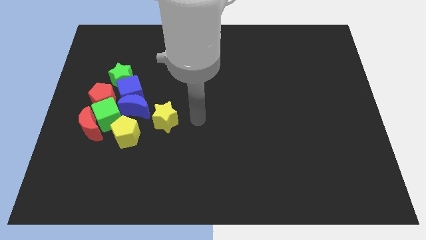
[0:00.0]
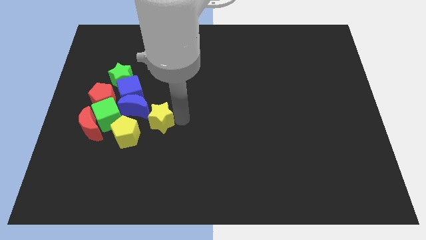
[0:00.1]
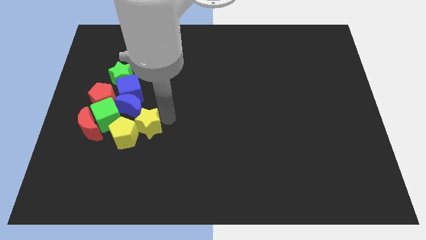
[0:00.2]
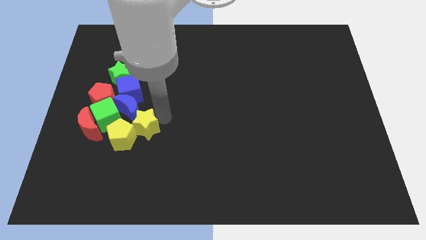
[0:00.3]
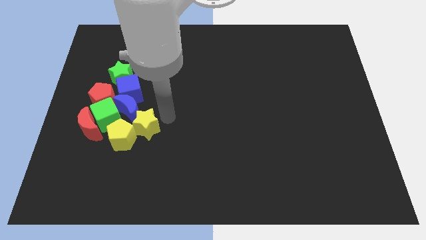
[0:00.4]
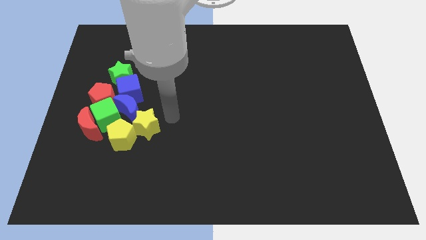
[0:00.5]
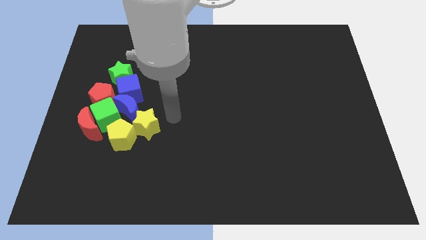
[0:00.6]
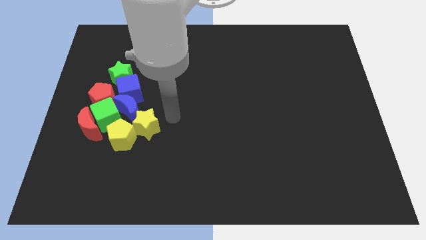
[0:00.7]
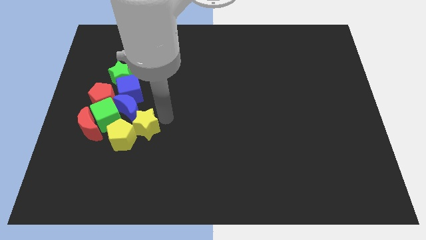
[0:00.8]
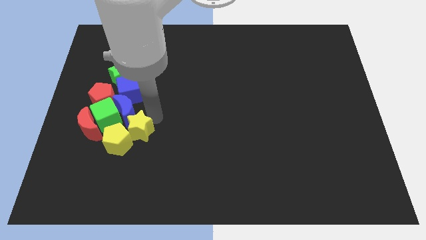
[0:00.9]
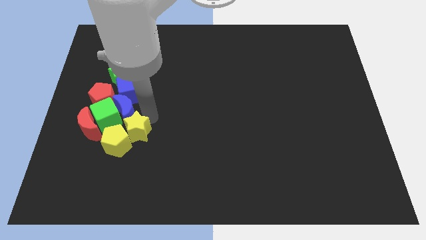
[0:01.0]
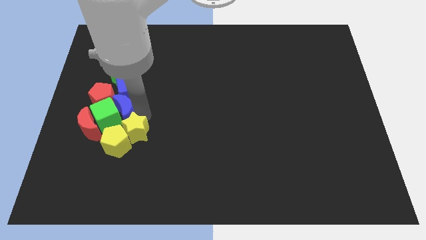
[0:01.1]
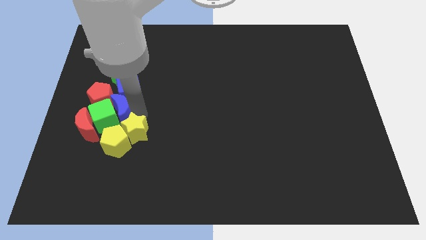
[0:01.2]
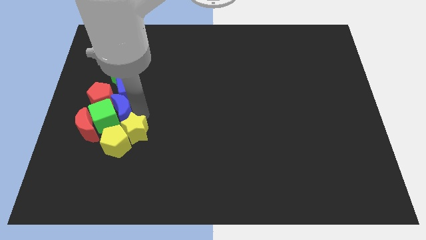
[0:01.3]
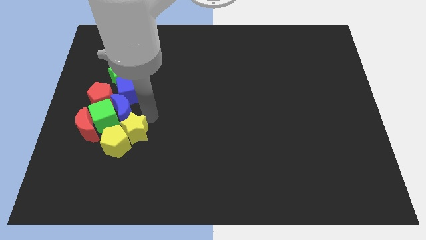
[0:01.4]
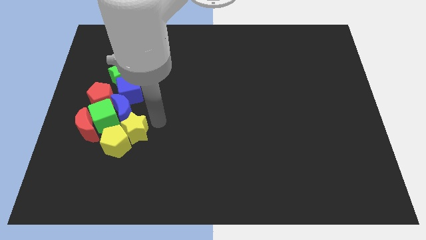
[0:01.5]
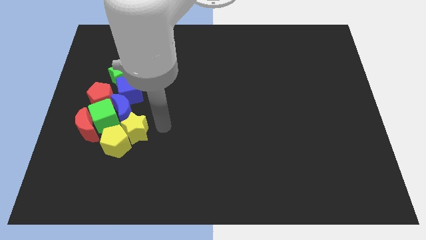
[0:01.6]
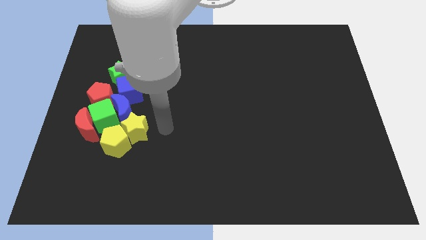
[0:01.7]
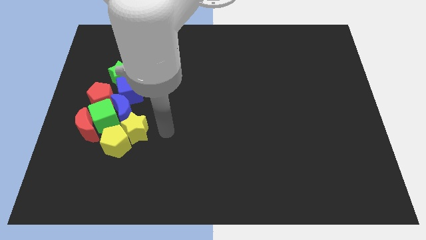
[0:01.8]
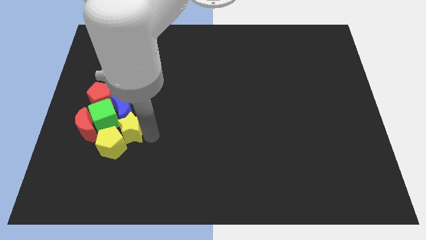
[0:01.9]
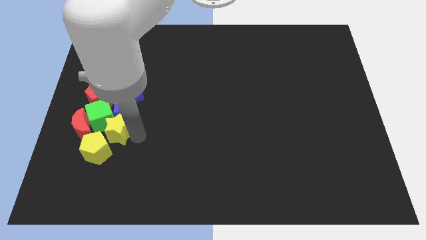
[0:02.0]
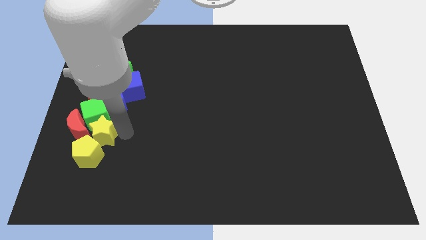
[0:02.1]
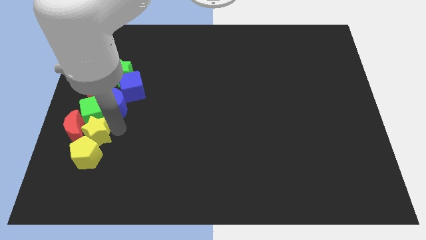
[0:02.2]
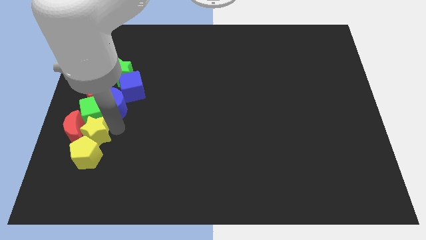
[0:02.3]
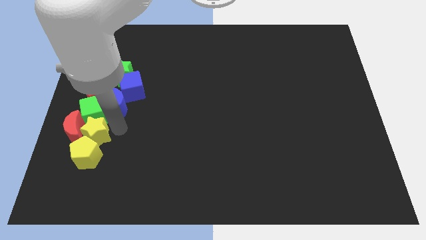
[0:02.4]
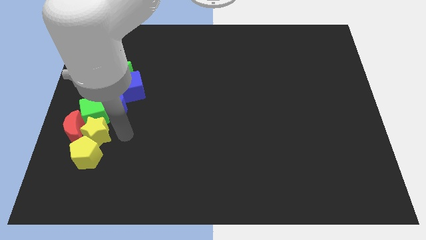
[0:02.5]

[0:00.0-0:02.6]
move the yellow star and yellow pentagon towards bottom of green cube

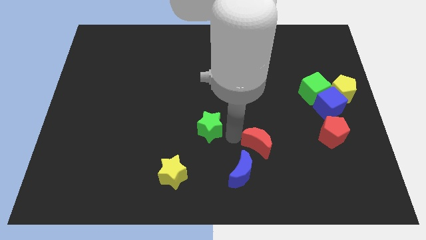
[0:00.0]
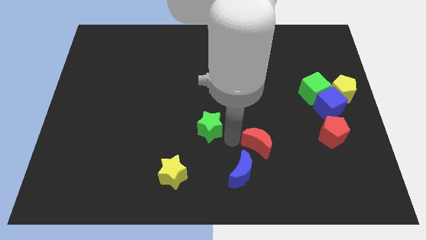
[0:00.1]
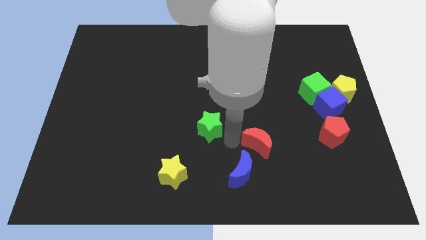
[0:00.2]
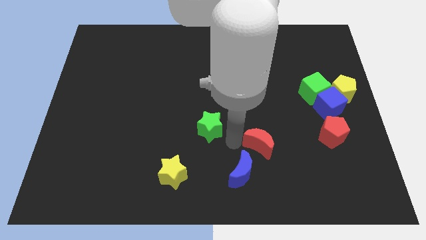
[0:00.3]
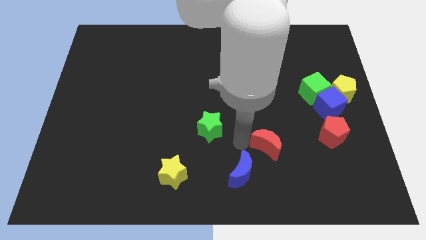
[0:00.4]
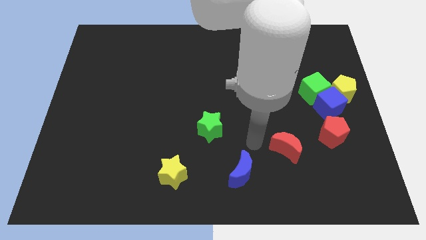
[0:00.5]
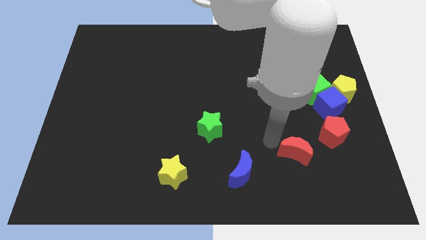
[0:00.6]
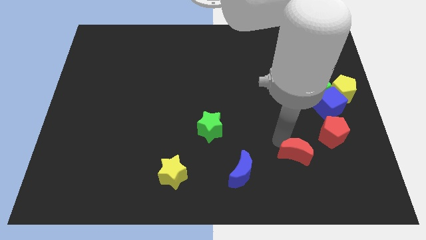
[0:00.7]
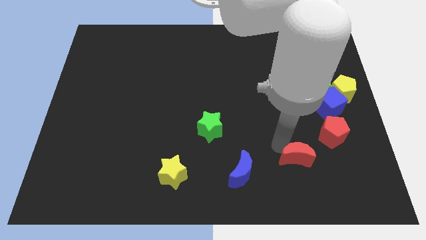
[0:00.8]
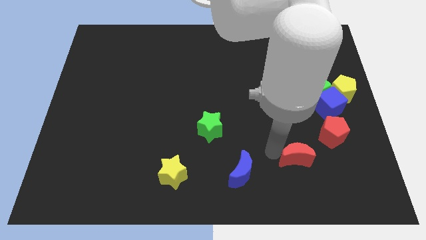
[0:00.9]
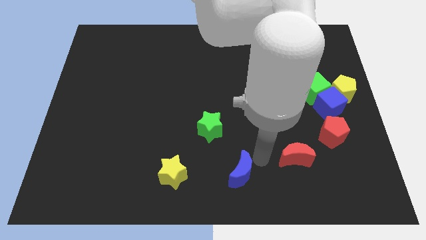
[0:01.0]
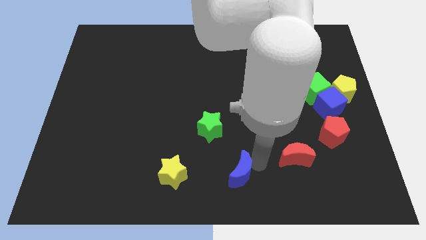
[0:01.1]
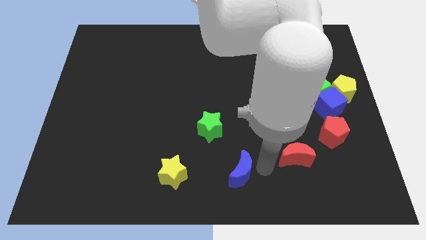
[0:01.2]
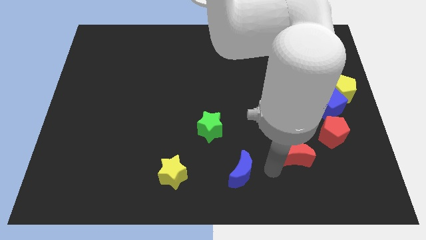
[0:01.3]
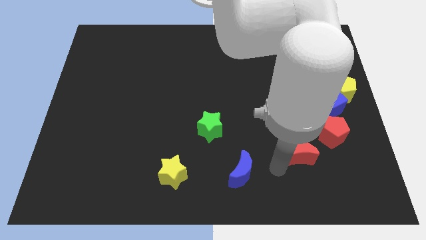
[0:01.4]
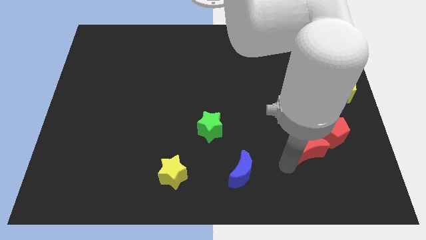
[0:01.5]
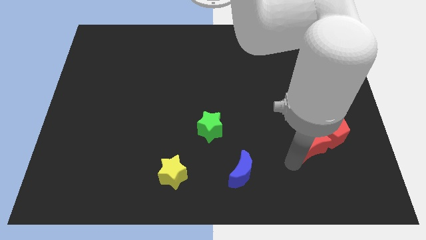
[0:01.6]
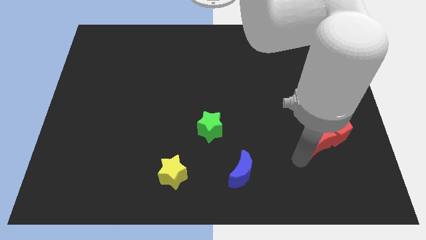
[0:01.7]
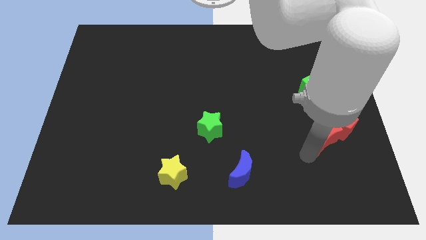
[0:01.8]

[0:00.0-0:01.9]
move the red crescent into the bottom left of the red pentagon

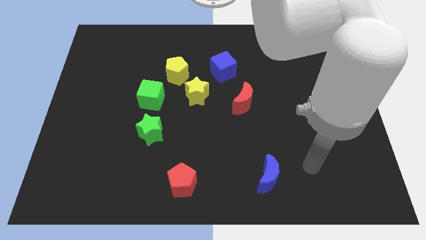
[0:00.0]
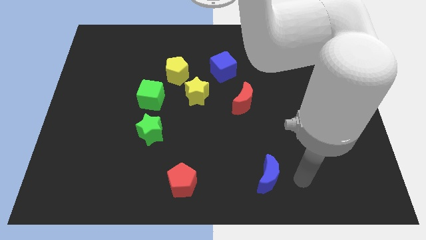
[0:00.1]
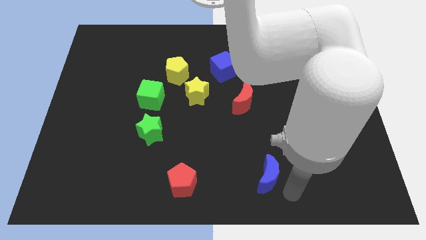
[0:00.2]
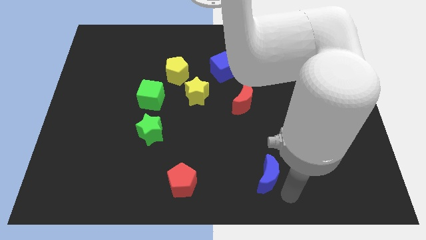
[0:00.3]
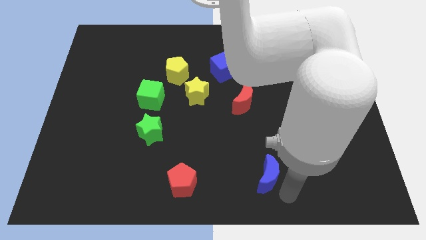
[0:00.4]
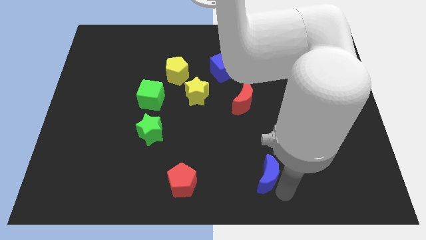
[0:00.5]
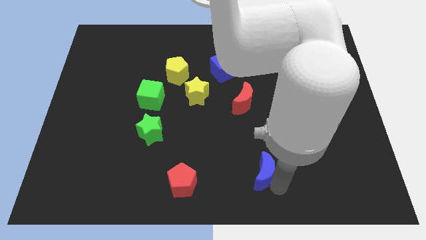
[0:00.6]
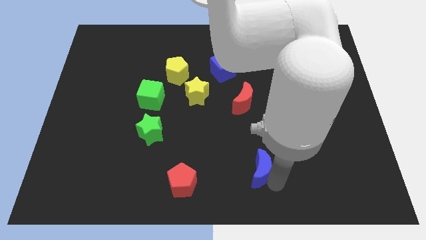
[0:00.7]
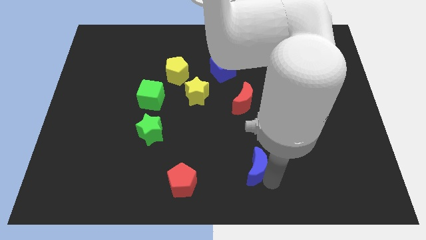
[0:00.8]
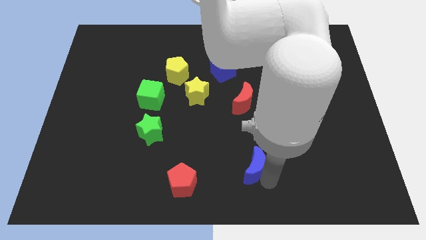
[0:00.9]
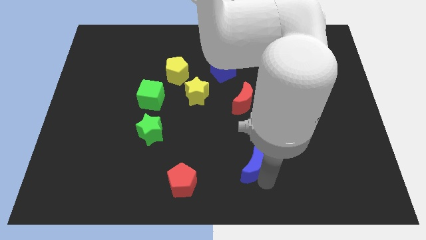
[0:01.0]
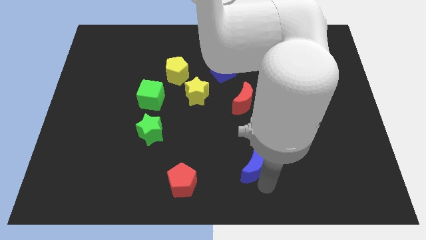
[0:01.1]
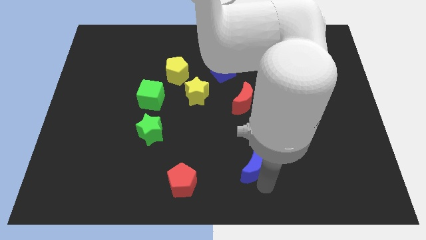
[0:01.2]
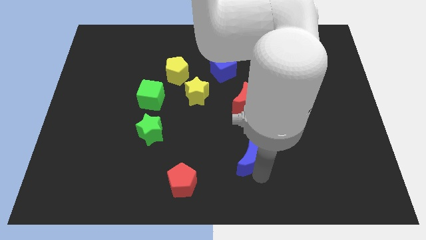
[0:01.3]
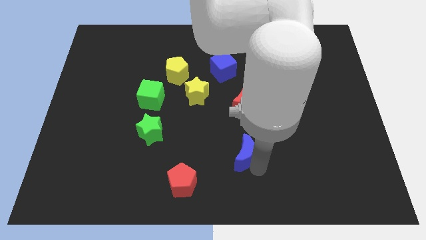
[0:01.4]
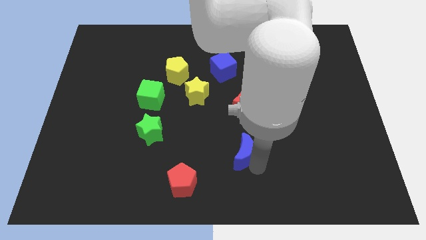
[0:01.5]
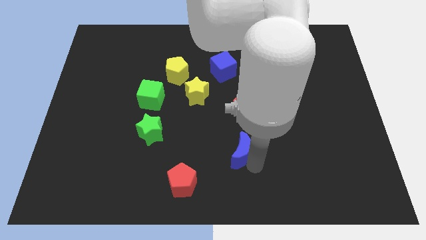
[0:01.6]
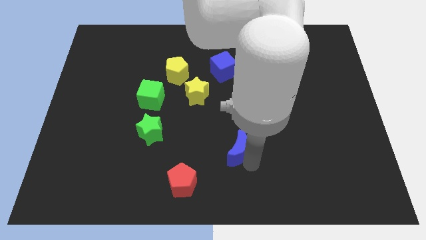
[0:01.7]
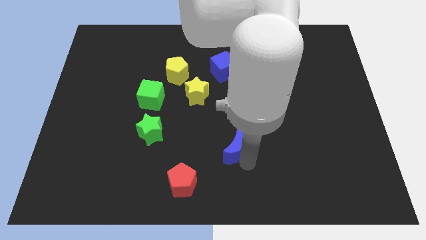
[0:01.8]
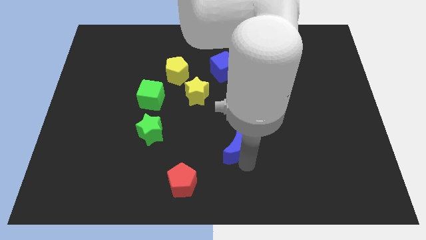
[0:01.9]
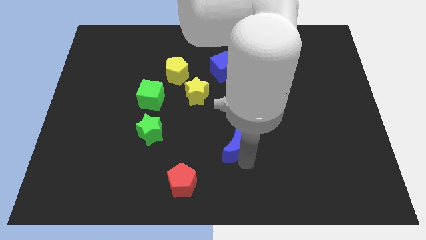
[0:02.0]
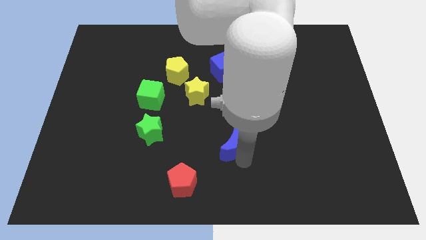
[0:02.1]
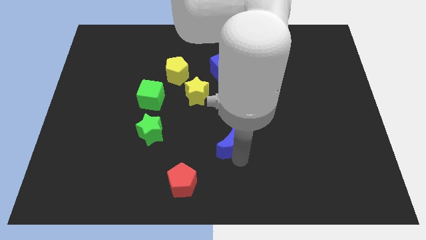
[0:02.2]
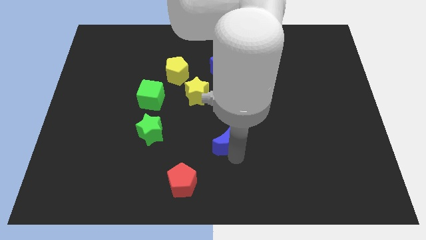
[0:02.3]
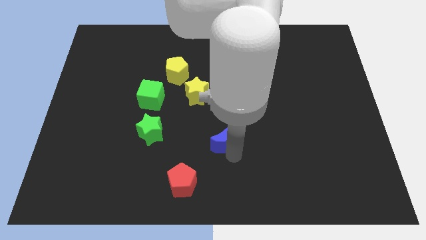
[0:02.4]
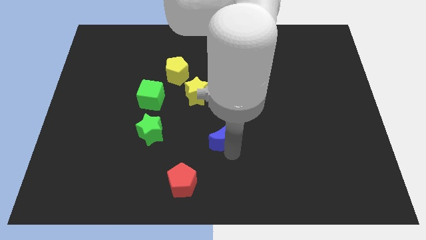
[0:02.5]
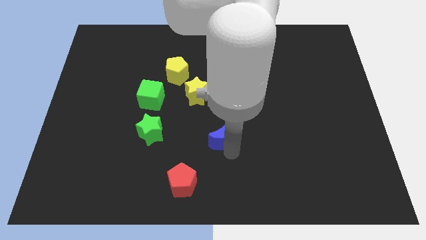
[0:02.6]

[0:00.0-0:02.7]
move blue moon upwards

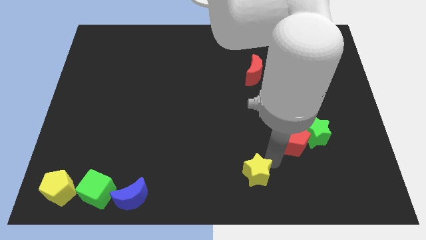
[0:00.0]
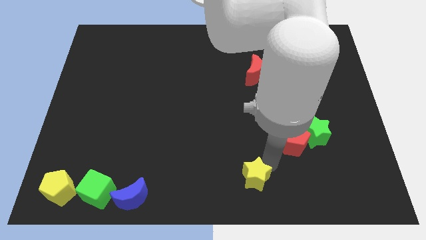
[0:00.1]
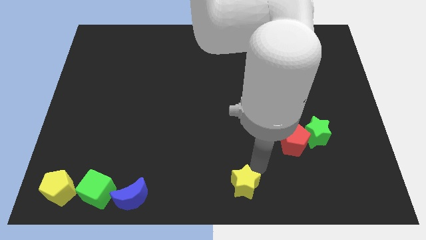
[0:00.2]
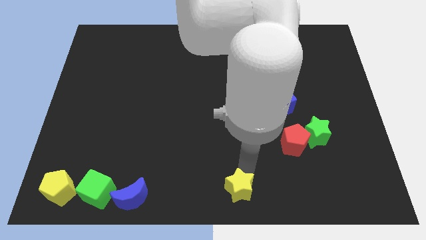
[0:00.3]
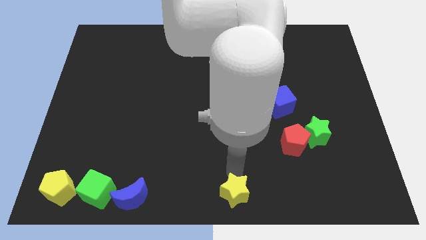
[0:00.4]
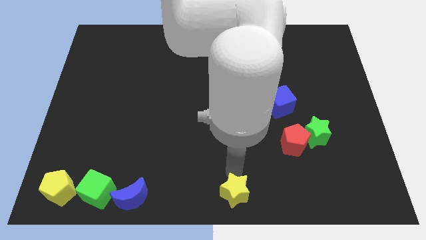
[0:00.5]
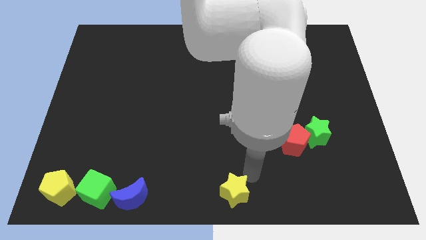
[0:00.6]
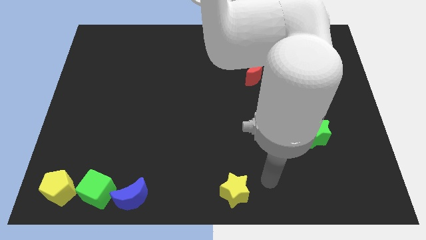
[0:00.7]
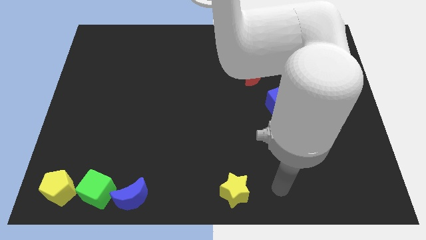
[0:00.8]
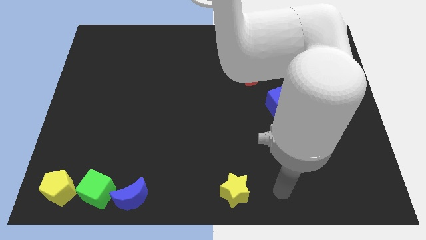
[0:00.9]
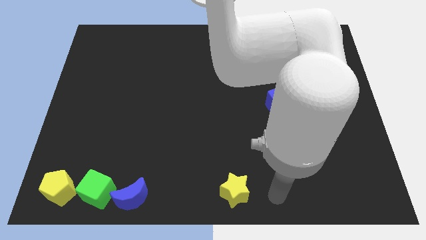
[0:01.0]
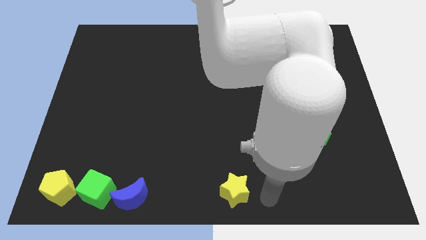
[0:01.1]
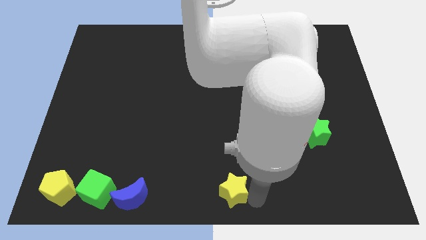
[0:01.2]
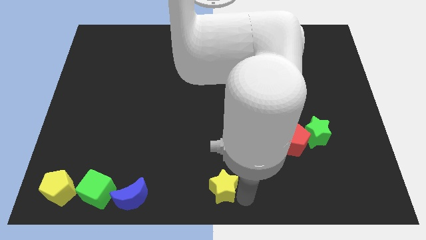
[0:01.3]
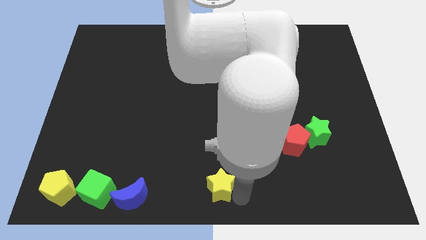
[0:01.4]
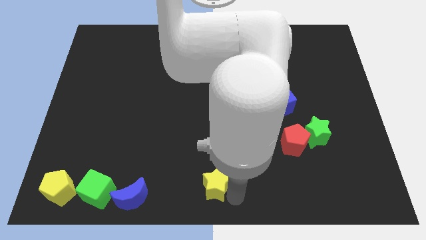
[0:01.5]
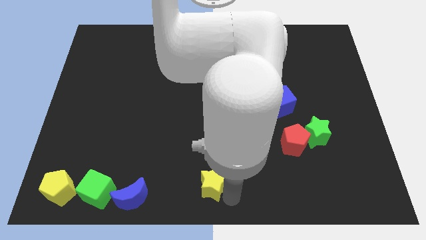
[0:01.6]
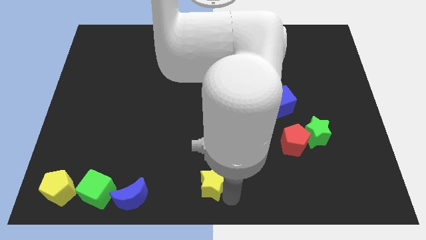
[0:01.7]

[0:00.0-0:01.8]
push the yellow star towards the bottom center
